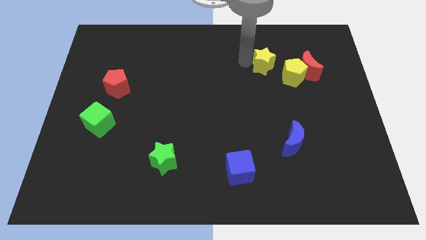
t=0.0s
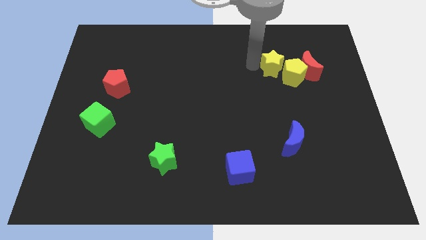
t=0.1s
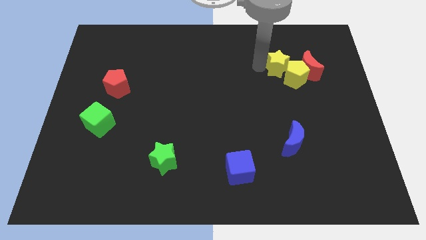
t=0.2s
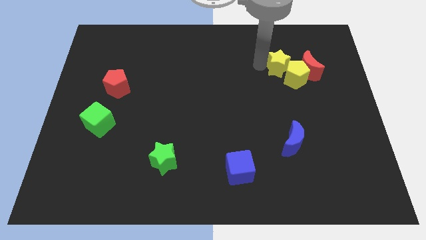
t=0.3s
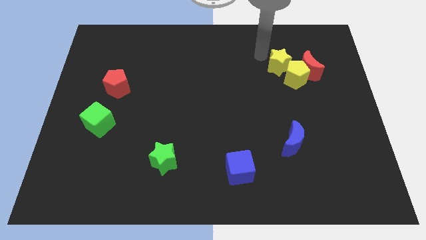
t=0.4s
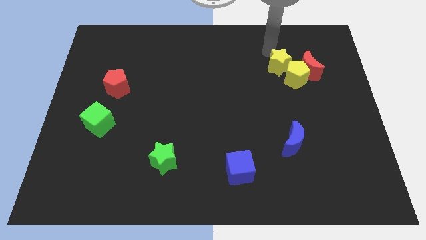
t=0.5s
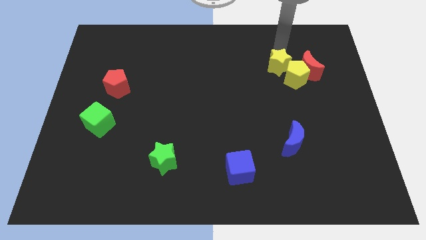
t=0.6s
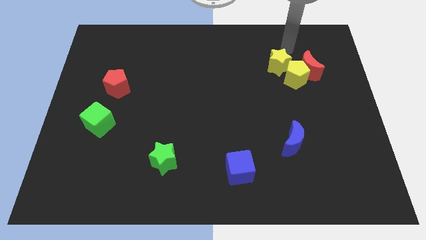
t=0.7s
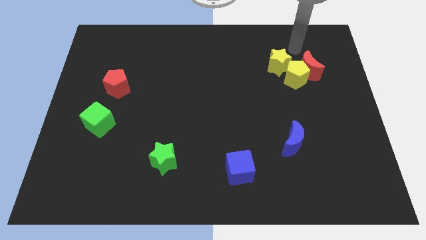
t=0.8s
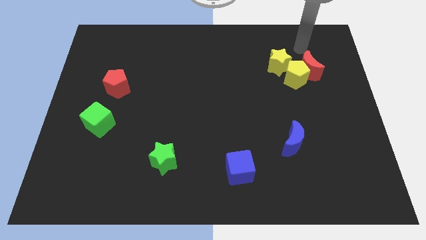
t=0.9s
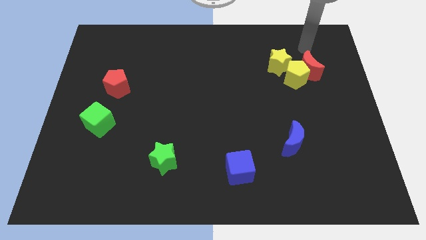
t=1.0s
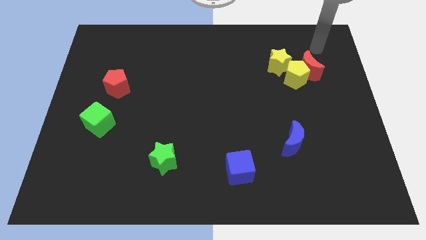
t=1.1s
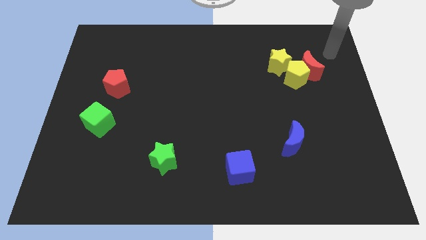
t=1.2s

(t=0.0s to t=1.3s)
push the yellow star into the yellow pentagon

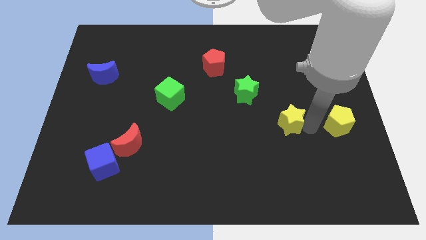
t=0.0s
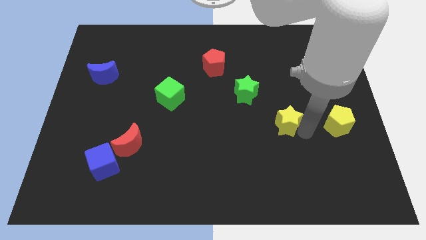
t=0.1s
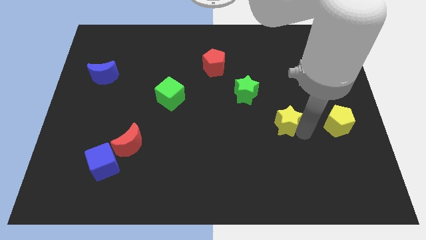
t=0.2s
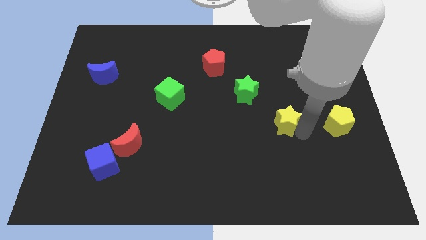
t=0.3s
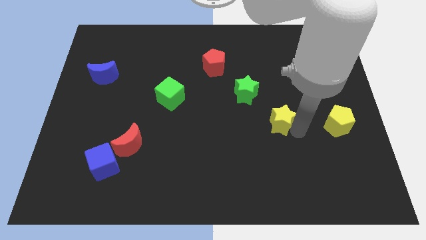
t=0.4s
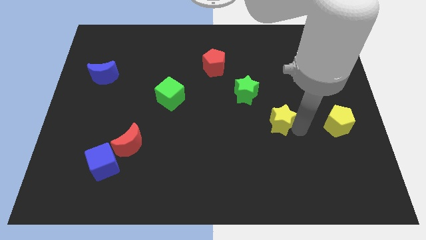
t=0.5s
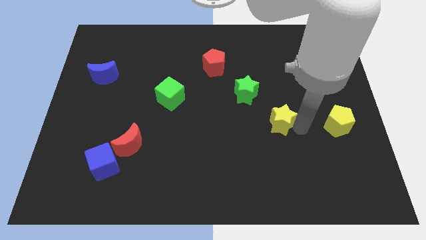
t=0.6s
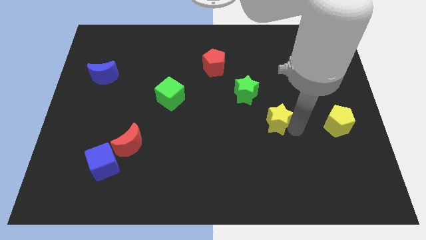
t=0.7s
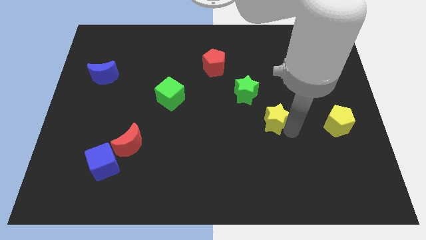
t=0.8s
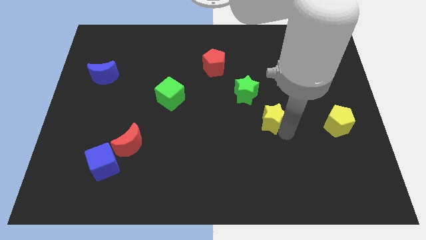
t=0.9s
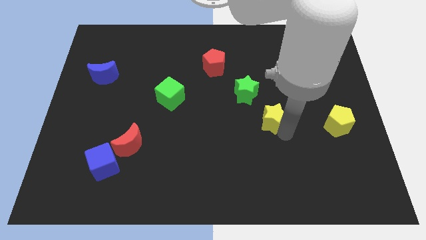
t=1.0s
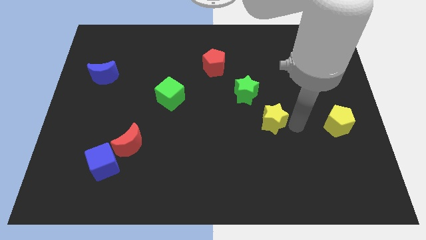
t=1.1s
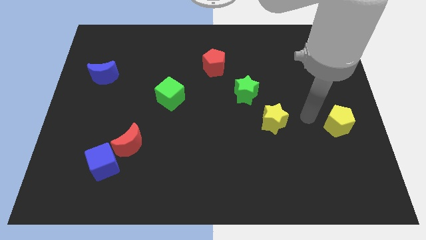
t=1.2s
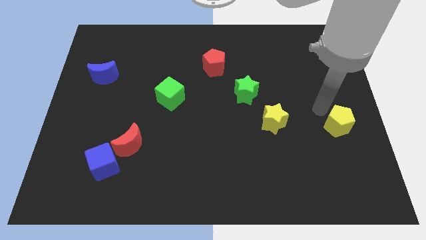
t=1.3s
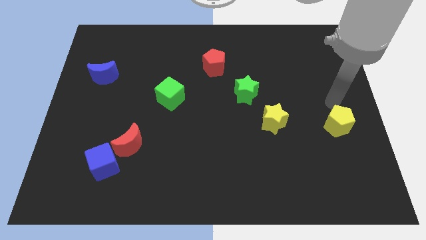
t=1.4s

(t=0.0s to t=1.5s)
place the yellow star below the green star

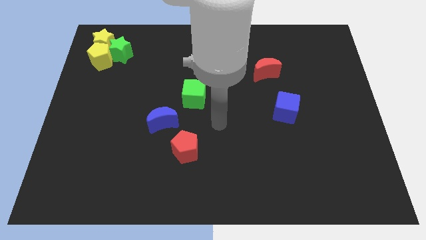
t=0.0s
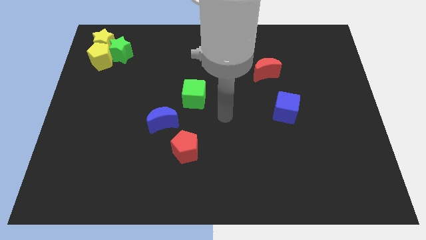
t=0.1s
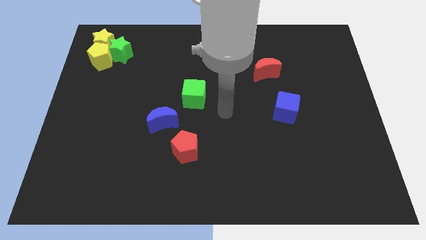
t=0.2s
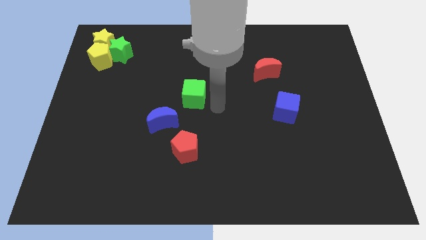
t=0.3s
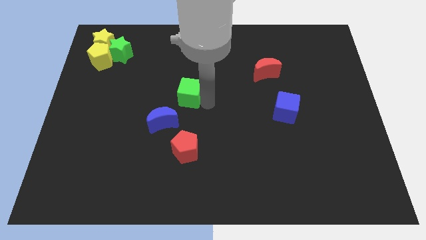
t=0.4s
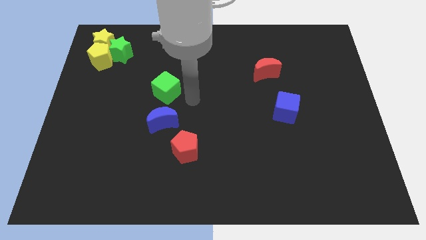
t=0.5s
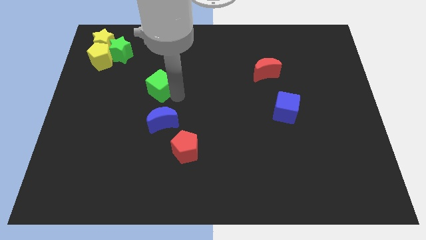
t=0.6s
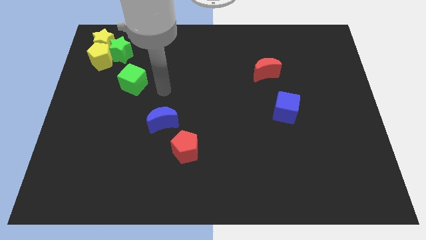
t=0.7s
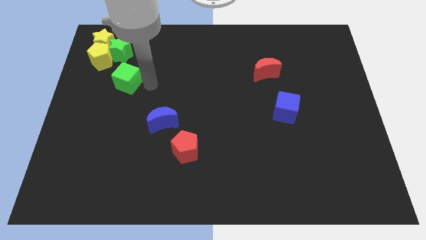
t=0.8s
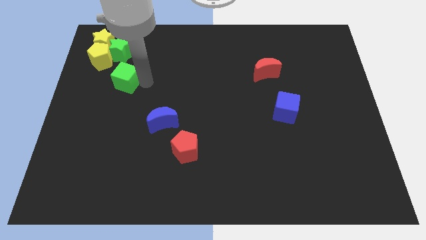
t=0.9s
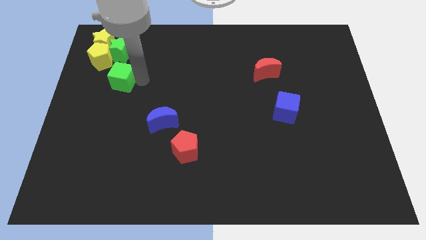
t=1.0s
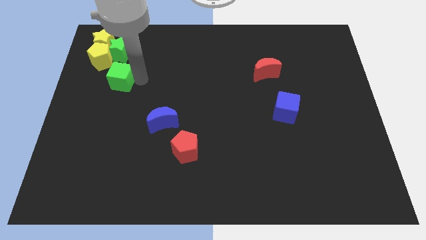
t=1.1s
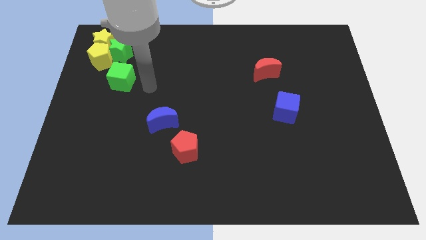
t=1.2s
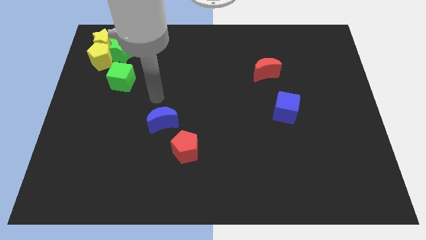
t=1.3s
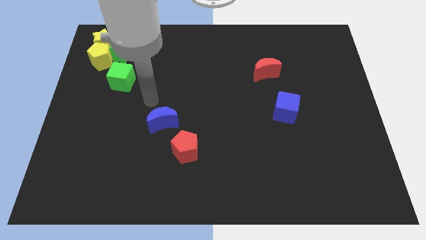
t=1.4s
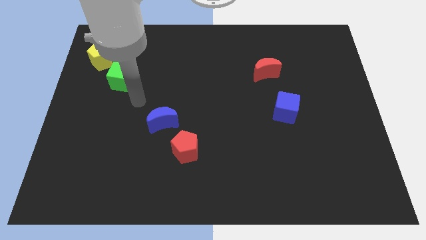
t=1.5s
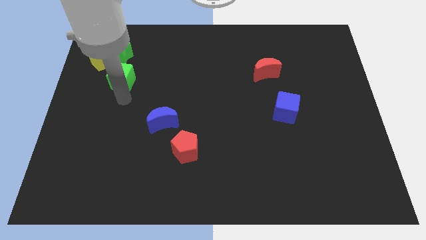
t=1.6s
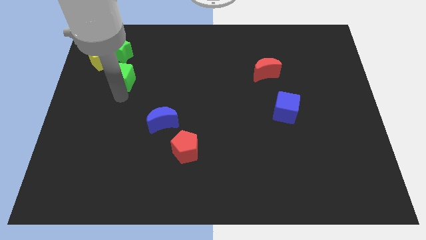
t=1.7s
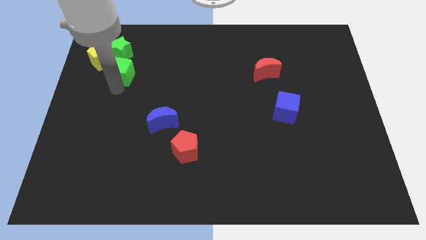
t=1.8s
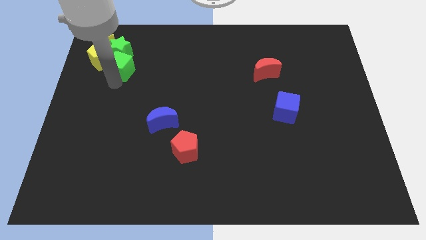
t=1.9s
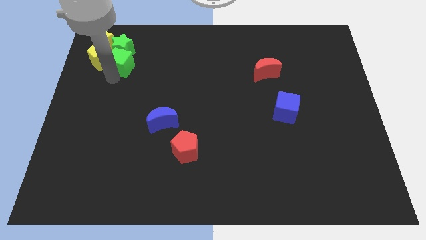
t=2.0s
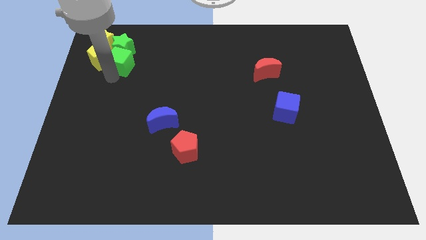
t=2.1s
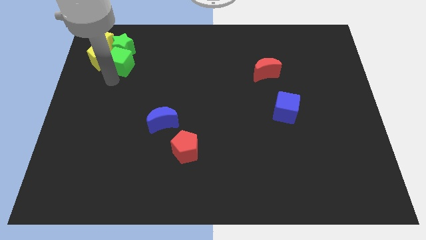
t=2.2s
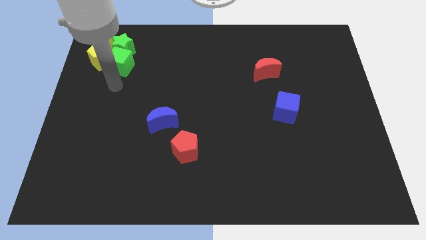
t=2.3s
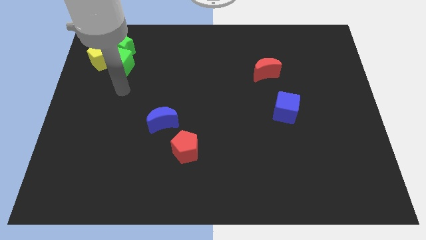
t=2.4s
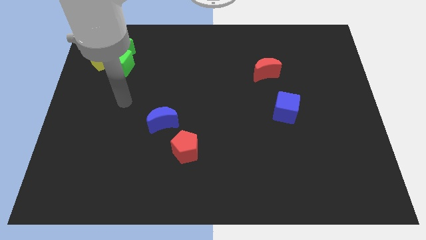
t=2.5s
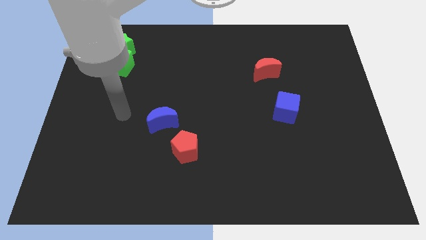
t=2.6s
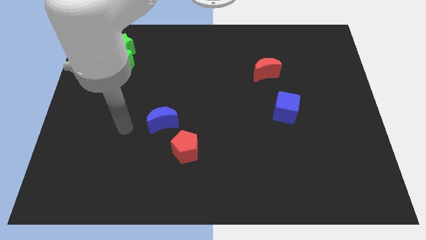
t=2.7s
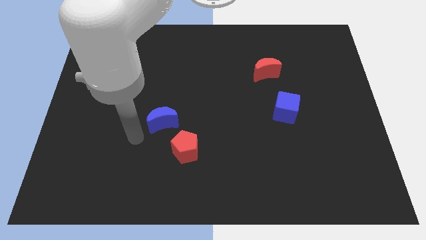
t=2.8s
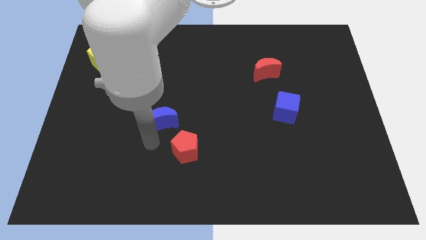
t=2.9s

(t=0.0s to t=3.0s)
push the green cube into the green star

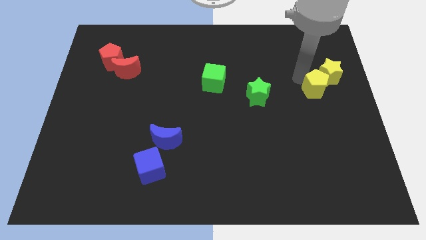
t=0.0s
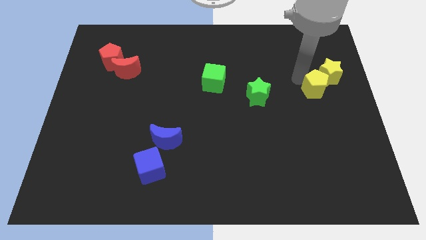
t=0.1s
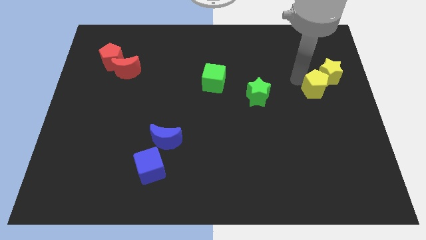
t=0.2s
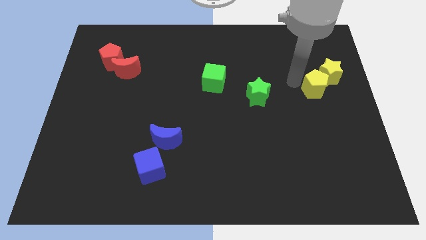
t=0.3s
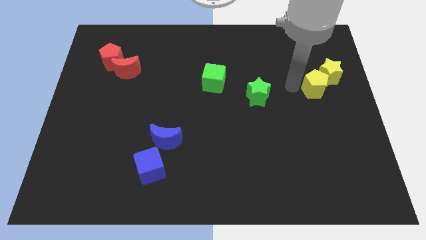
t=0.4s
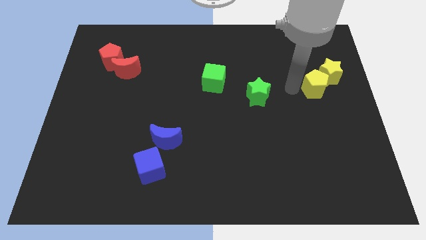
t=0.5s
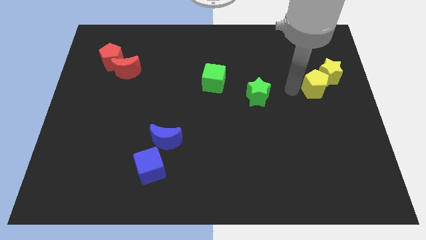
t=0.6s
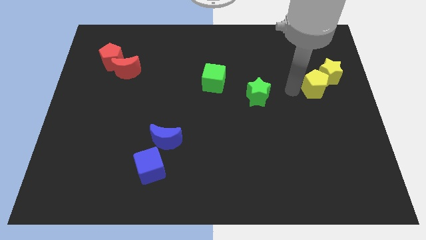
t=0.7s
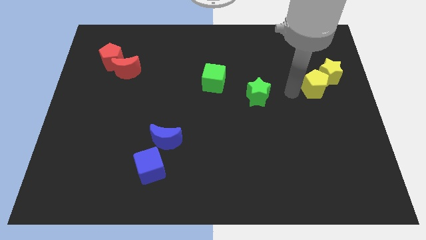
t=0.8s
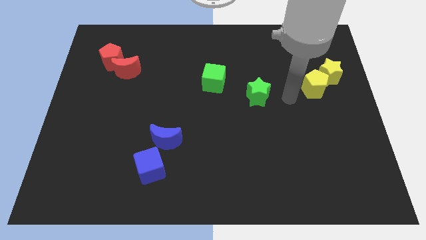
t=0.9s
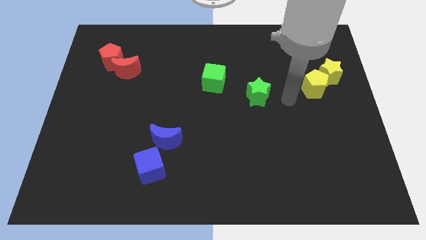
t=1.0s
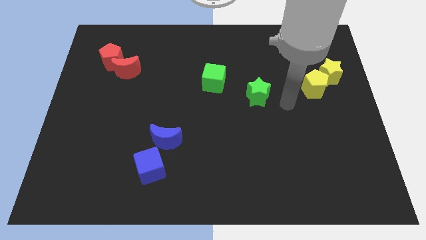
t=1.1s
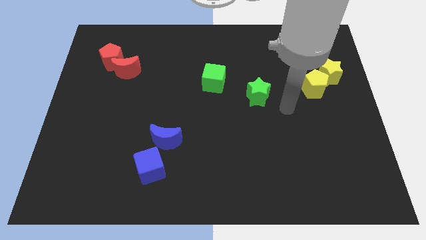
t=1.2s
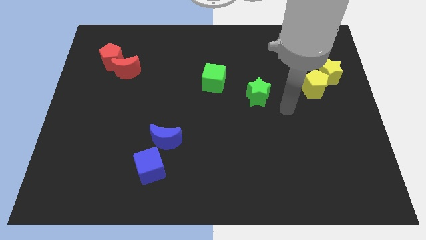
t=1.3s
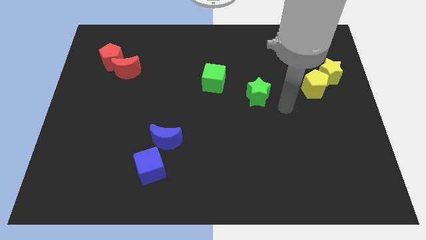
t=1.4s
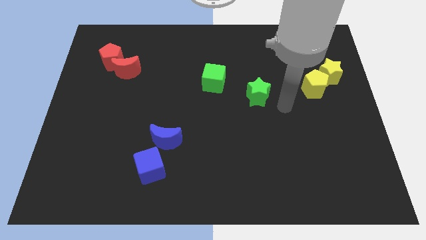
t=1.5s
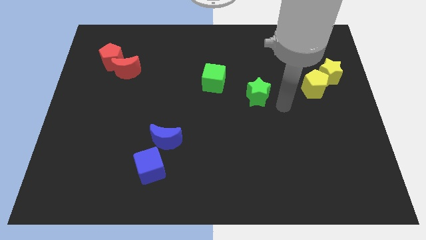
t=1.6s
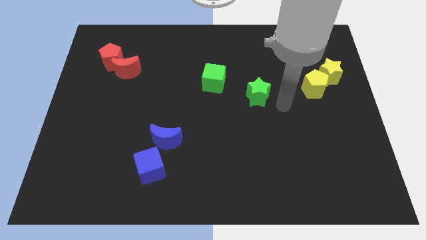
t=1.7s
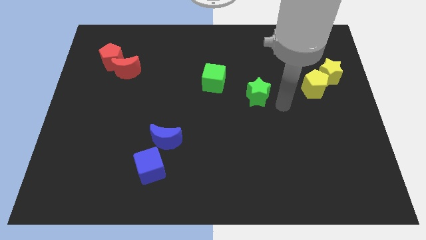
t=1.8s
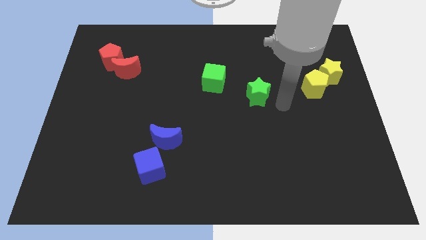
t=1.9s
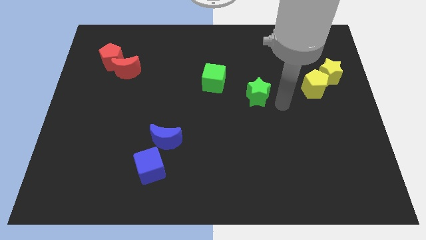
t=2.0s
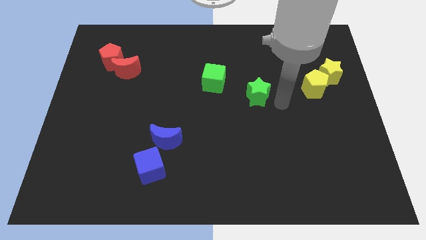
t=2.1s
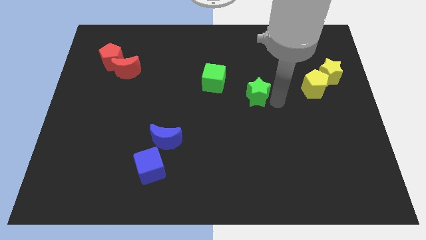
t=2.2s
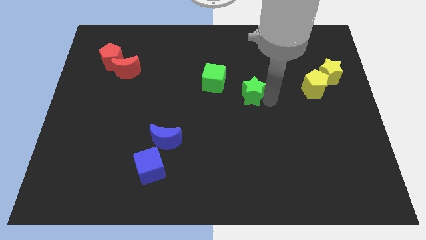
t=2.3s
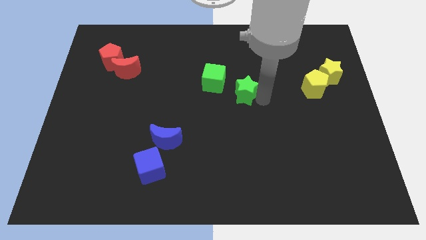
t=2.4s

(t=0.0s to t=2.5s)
move the arm to the green star

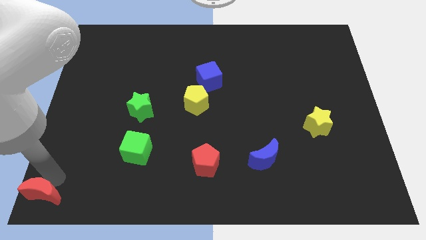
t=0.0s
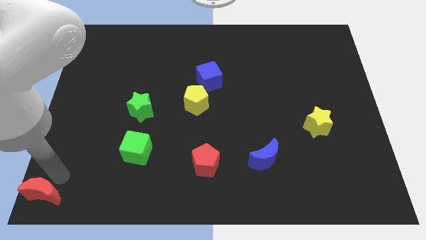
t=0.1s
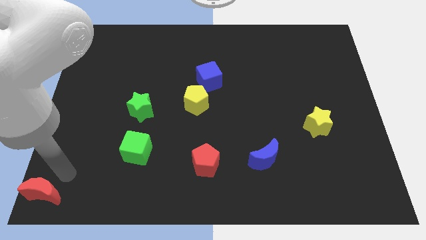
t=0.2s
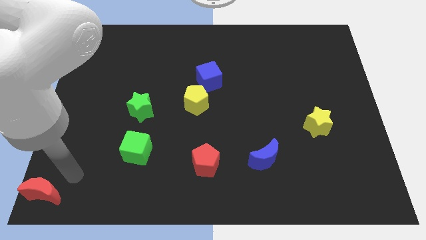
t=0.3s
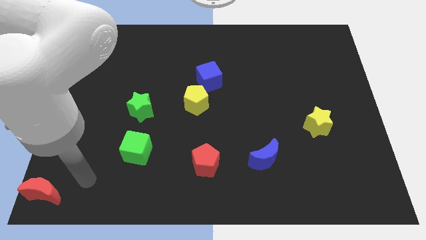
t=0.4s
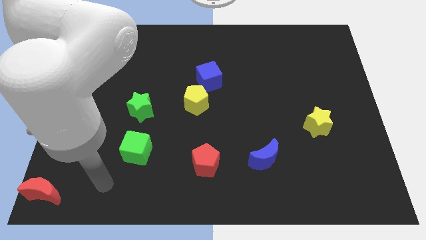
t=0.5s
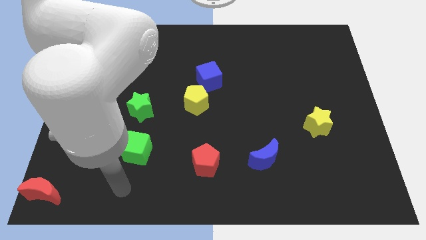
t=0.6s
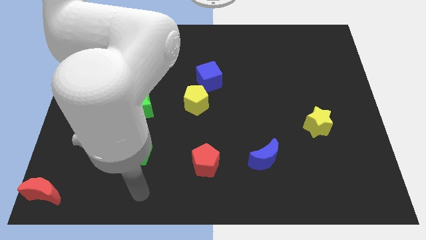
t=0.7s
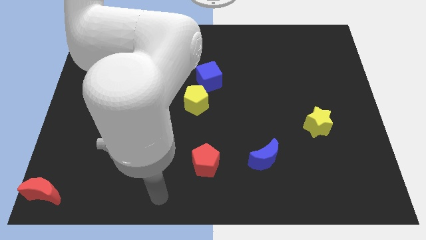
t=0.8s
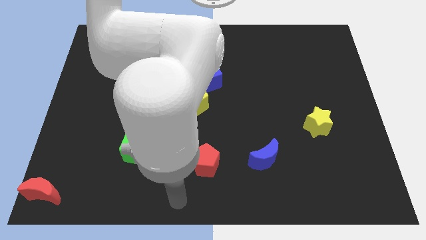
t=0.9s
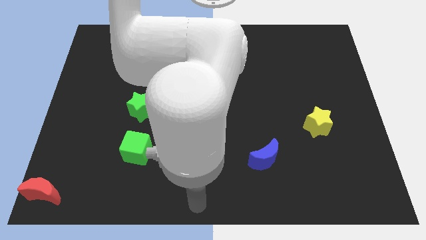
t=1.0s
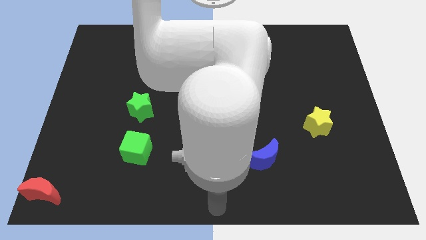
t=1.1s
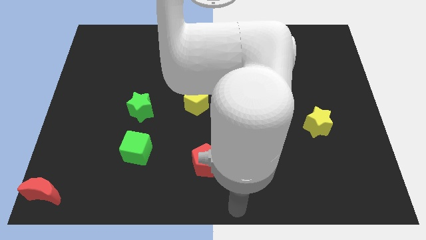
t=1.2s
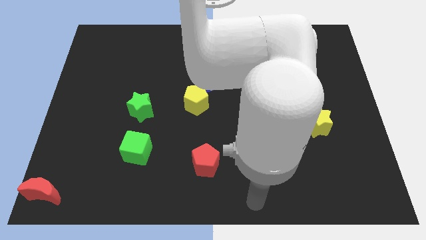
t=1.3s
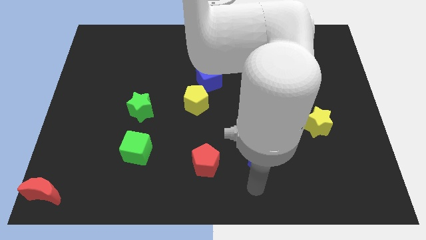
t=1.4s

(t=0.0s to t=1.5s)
move the arm away from the red moon
